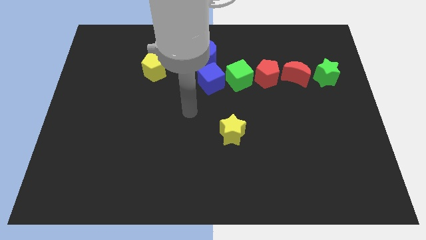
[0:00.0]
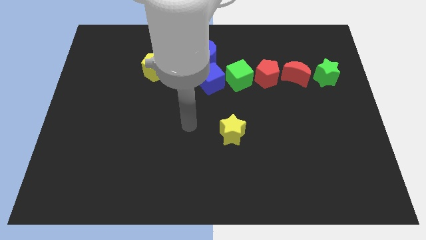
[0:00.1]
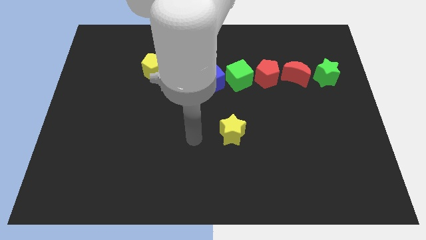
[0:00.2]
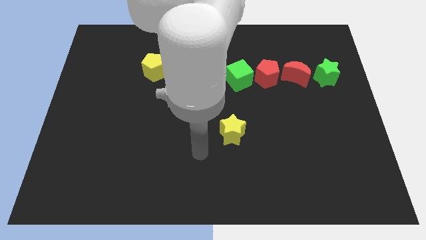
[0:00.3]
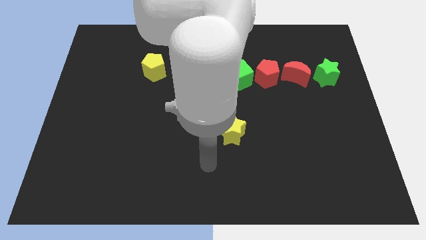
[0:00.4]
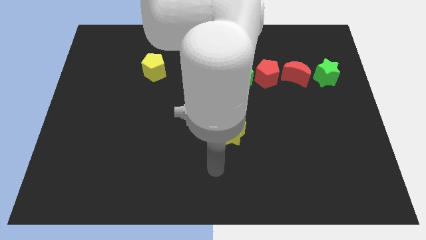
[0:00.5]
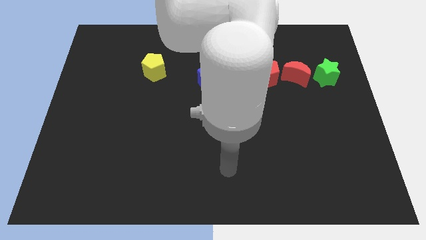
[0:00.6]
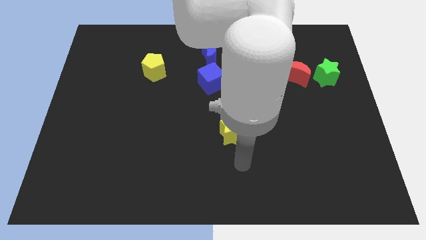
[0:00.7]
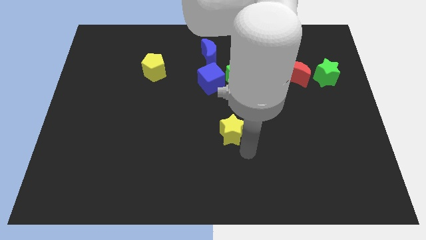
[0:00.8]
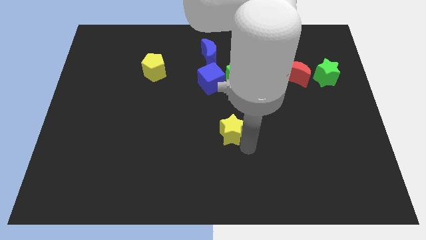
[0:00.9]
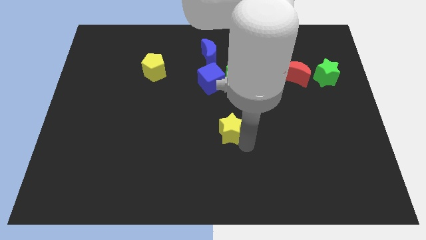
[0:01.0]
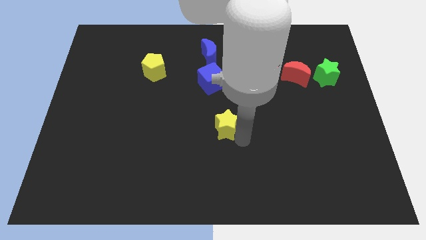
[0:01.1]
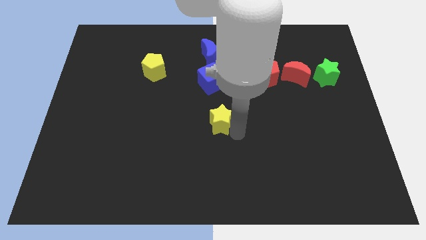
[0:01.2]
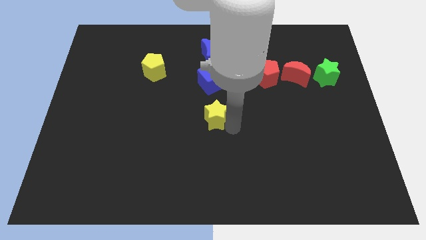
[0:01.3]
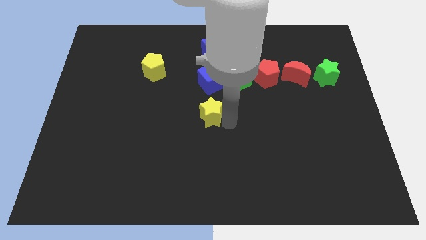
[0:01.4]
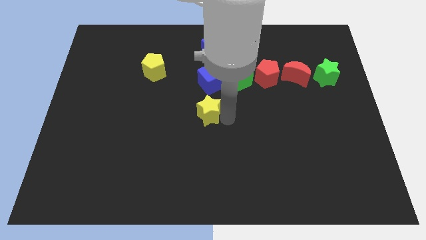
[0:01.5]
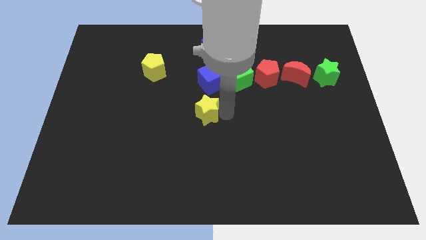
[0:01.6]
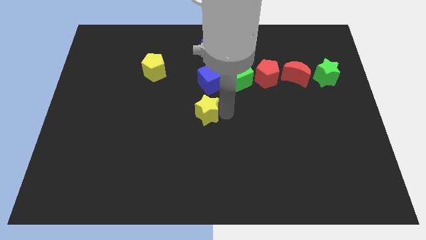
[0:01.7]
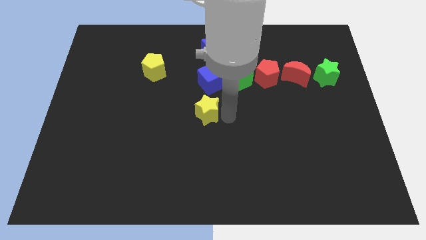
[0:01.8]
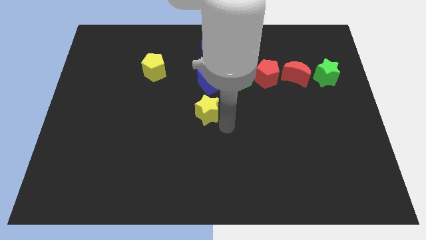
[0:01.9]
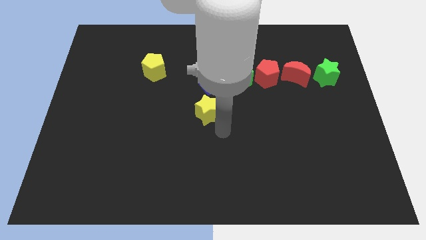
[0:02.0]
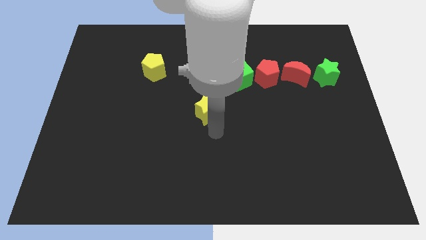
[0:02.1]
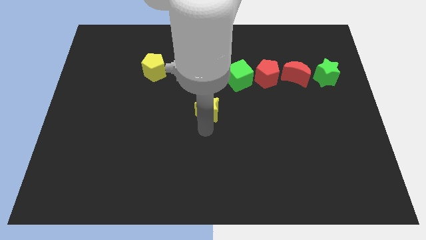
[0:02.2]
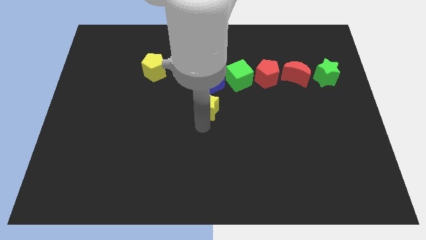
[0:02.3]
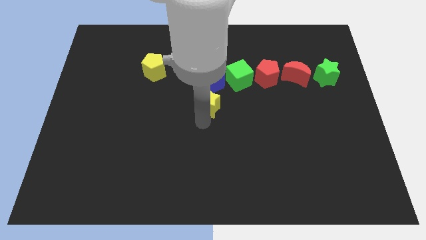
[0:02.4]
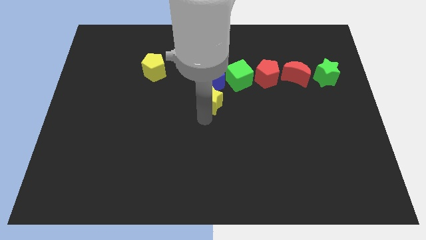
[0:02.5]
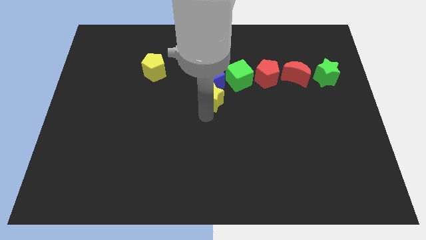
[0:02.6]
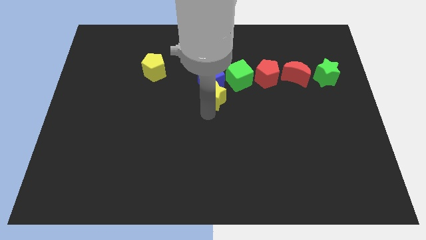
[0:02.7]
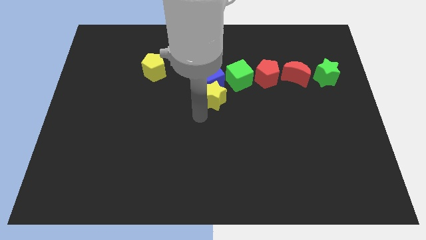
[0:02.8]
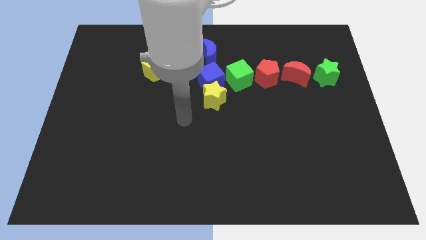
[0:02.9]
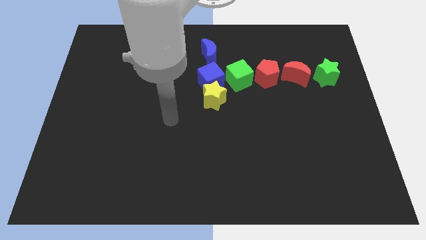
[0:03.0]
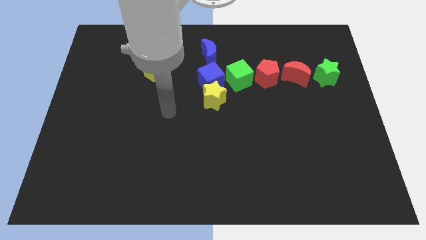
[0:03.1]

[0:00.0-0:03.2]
push the yellow star to the bottom side of the blue cube

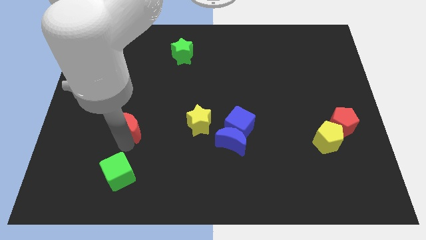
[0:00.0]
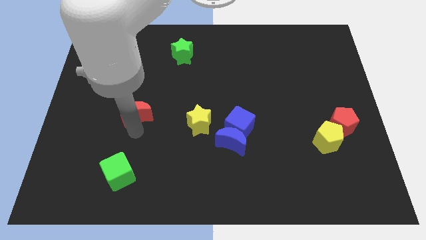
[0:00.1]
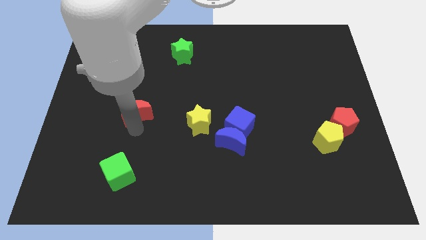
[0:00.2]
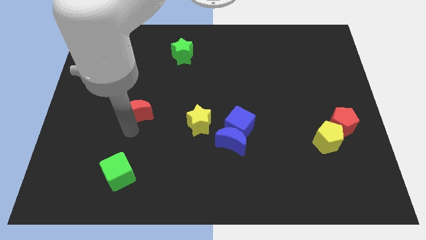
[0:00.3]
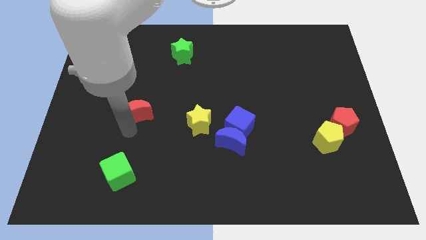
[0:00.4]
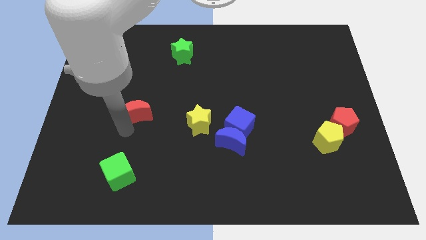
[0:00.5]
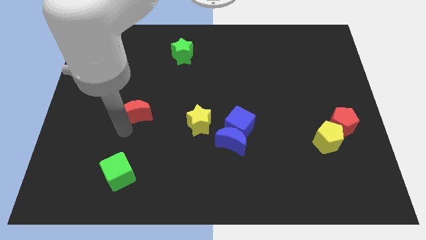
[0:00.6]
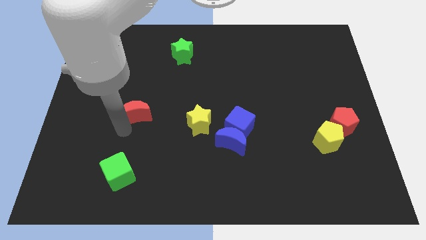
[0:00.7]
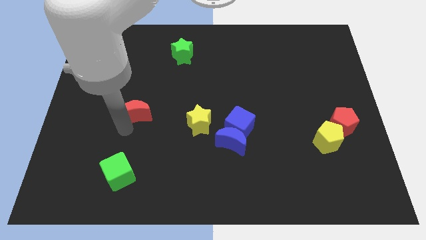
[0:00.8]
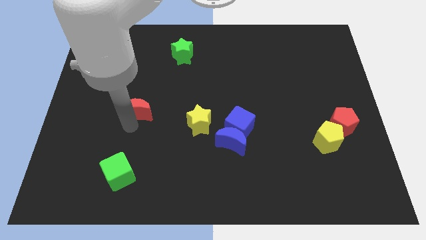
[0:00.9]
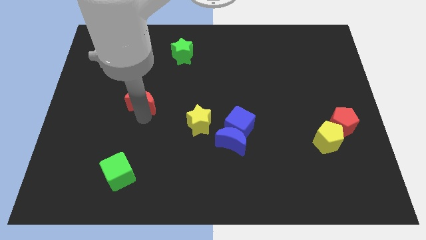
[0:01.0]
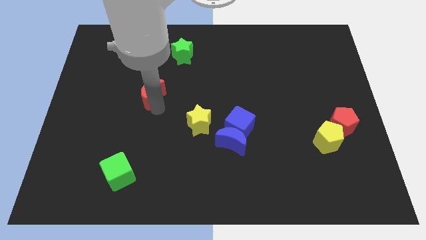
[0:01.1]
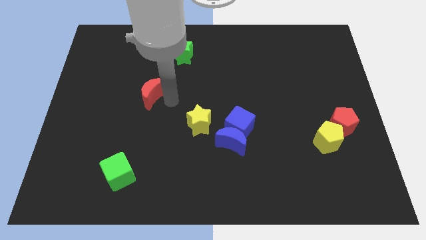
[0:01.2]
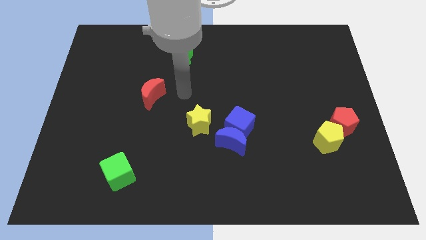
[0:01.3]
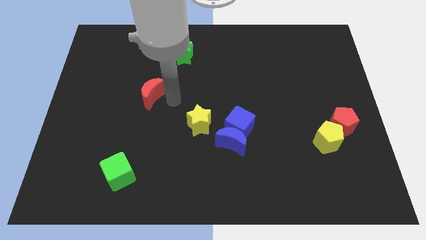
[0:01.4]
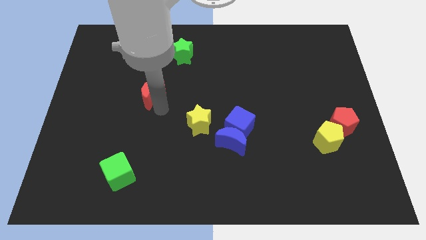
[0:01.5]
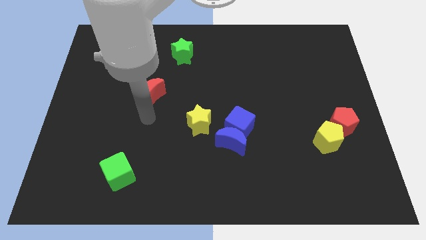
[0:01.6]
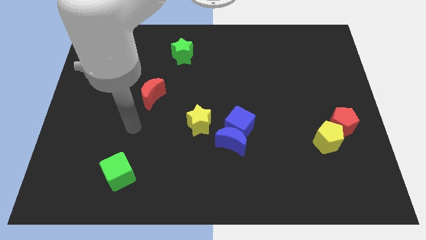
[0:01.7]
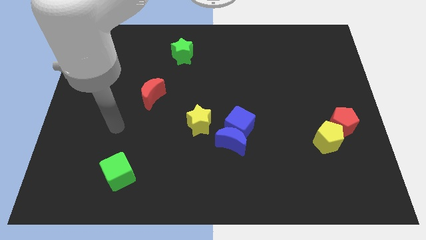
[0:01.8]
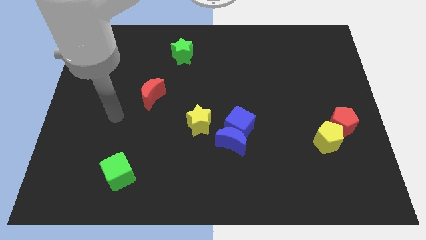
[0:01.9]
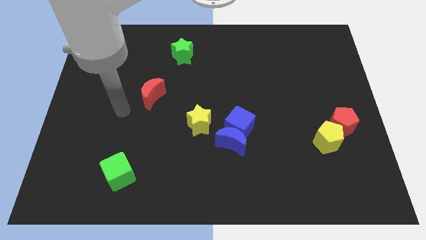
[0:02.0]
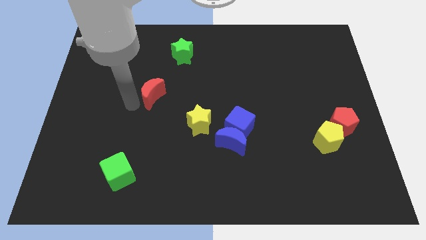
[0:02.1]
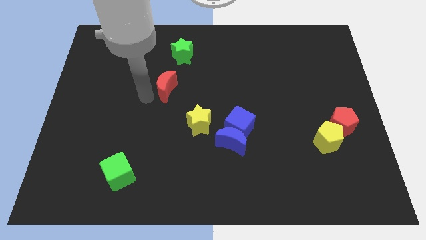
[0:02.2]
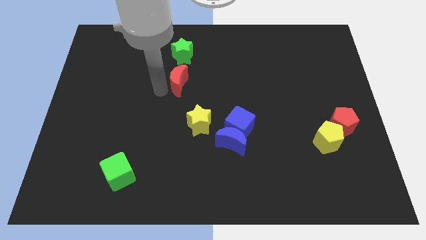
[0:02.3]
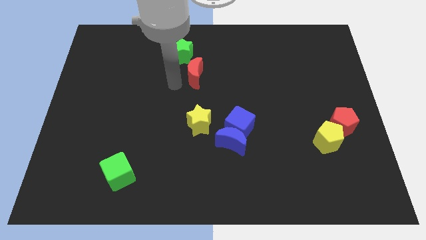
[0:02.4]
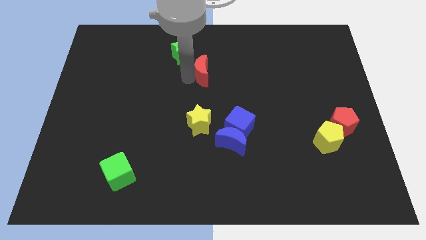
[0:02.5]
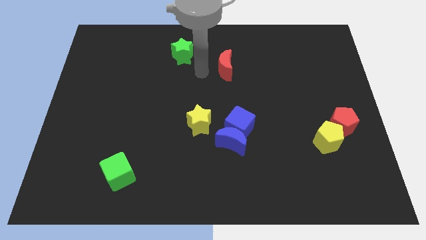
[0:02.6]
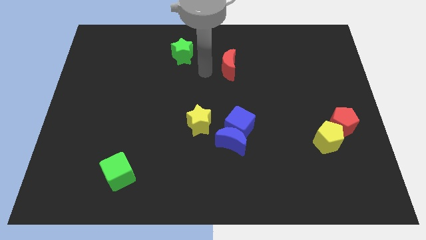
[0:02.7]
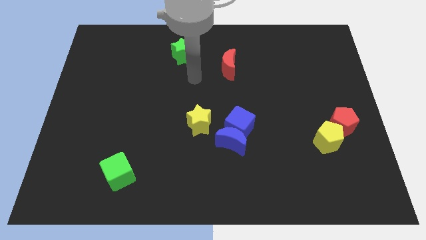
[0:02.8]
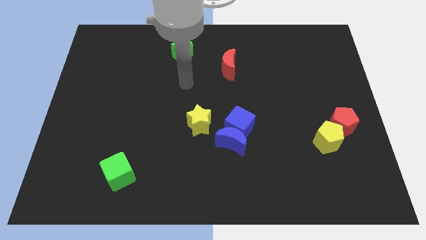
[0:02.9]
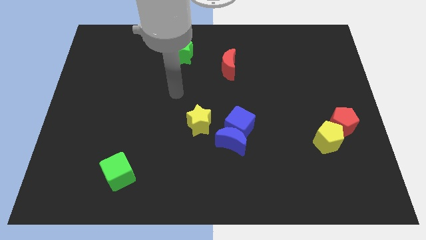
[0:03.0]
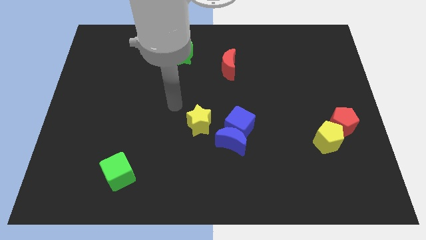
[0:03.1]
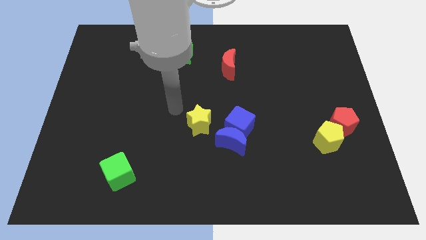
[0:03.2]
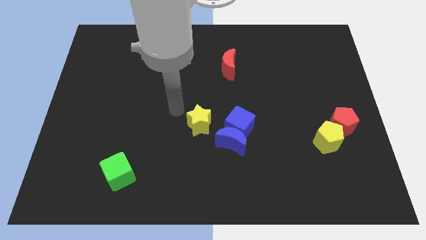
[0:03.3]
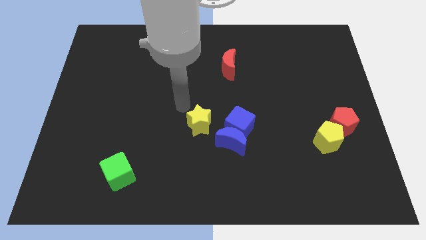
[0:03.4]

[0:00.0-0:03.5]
slide the red crescent diagonally on the top right side of the yellow star

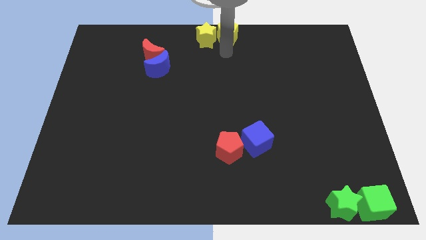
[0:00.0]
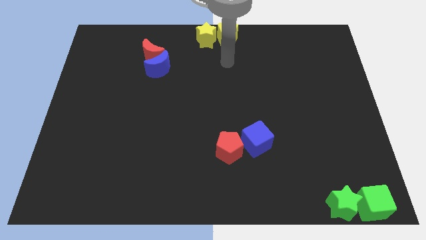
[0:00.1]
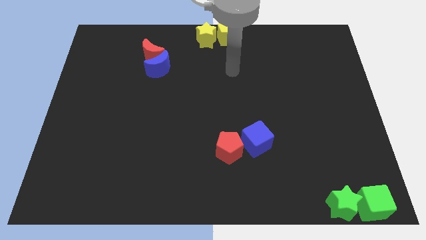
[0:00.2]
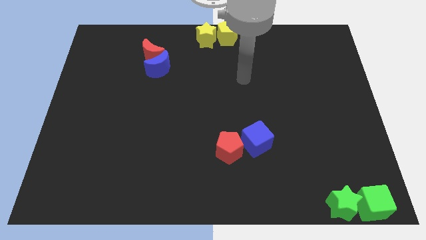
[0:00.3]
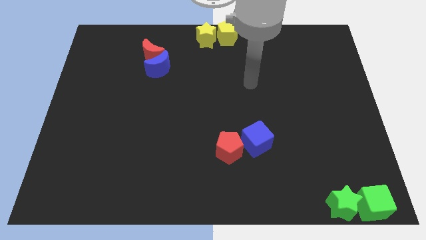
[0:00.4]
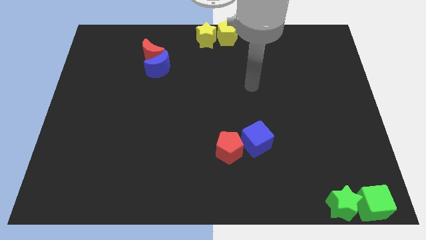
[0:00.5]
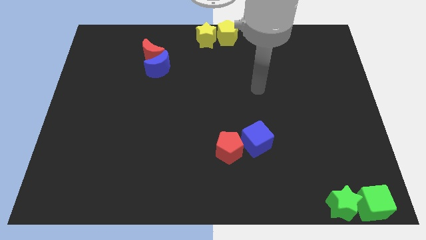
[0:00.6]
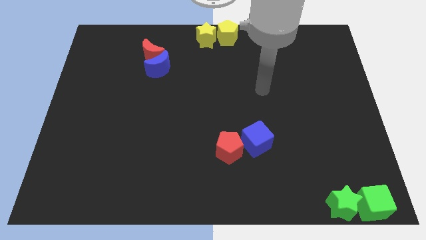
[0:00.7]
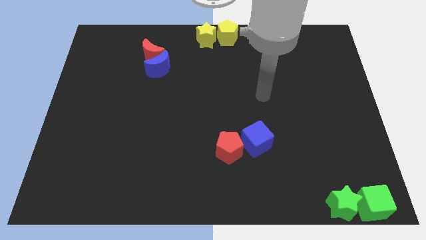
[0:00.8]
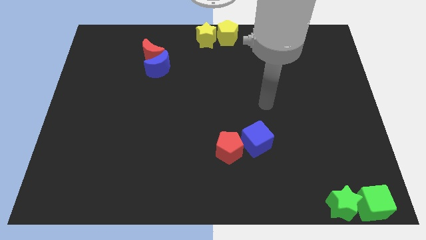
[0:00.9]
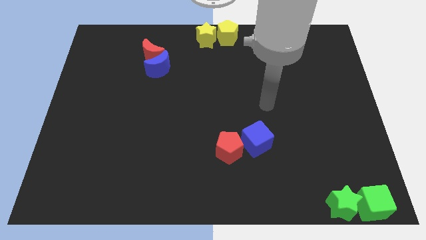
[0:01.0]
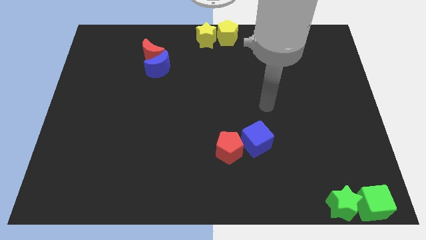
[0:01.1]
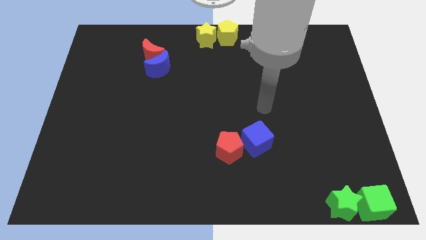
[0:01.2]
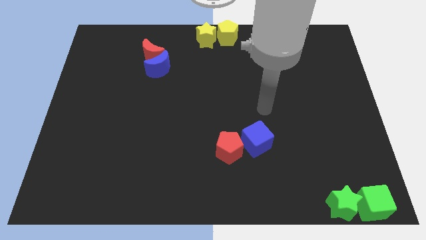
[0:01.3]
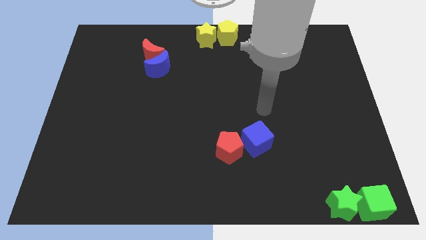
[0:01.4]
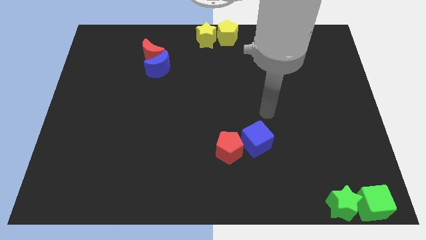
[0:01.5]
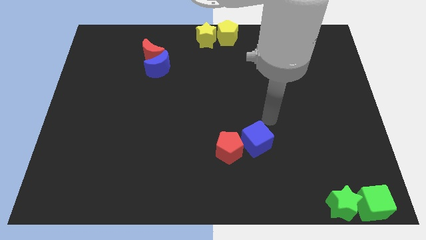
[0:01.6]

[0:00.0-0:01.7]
point your hand above the blue cube

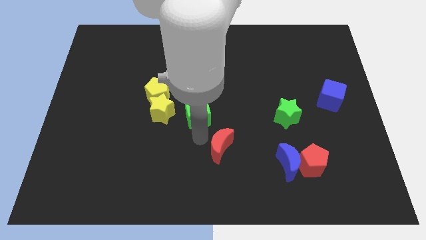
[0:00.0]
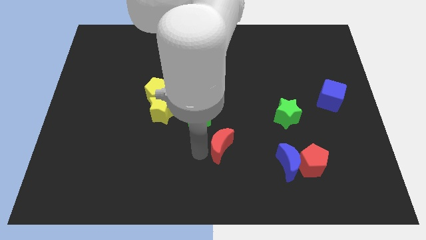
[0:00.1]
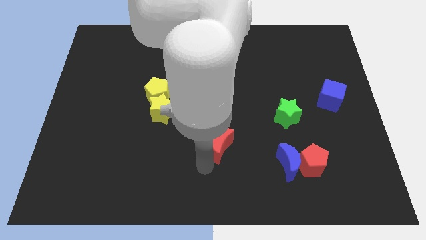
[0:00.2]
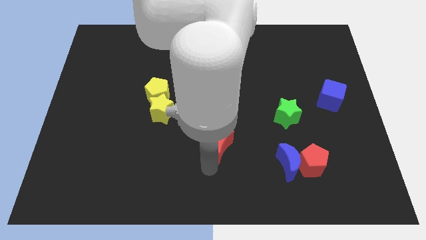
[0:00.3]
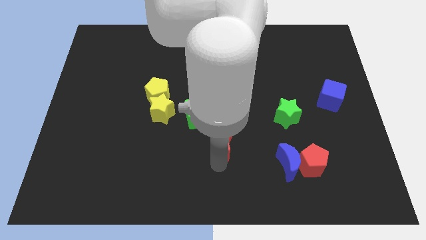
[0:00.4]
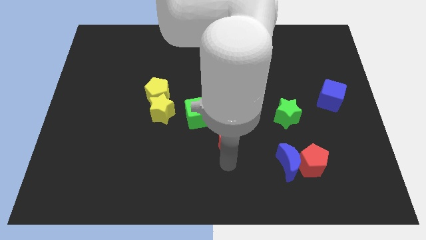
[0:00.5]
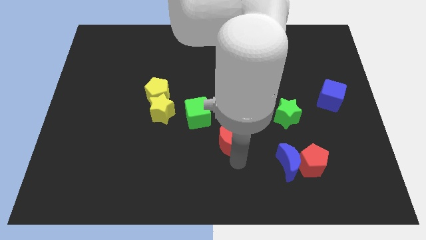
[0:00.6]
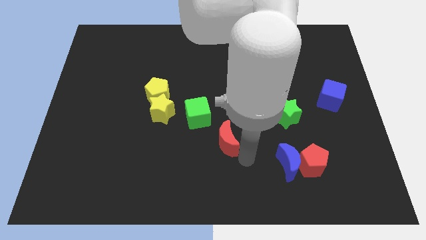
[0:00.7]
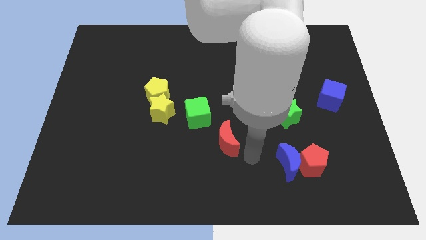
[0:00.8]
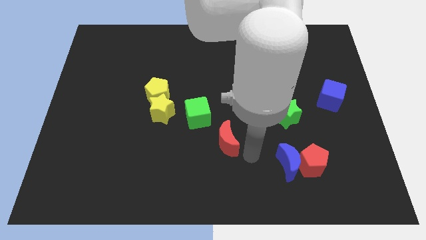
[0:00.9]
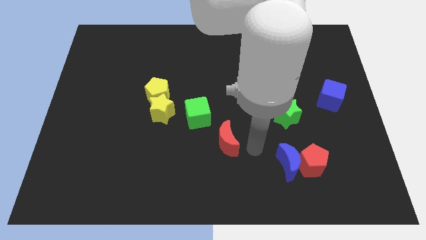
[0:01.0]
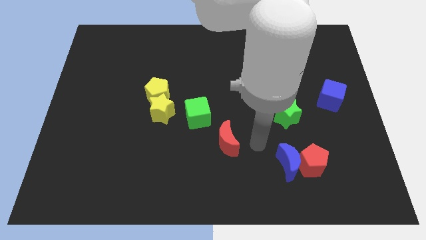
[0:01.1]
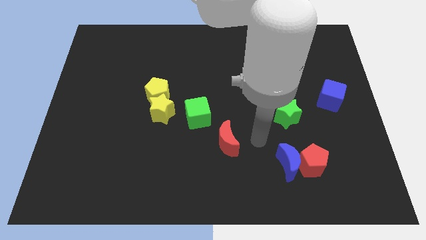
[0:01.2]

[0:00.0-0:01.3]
slightly push the red moon towards the top side
